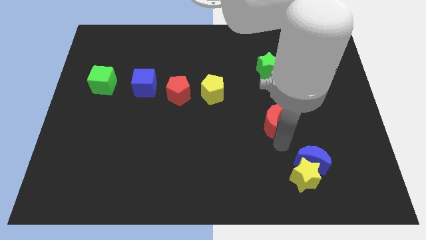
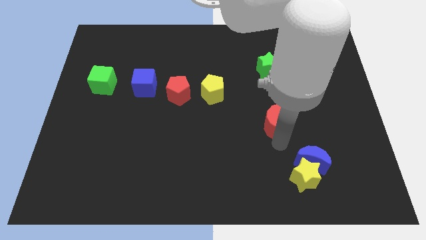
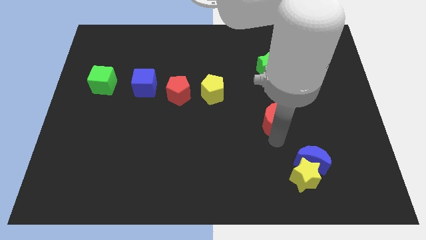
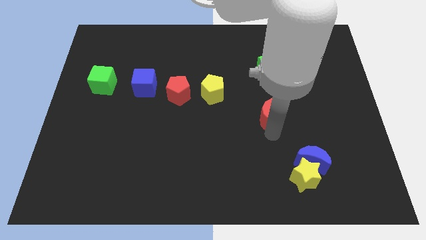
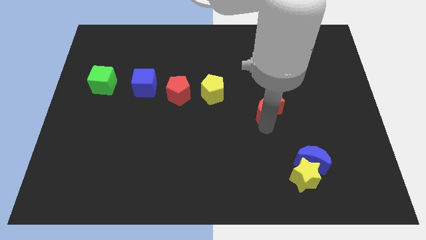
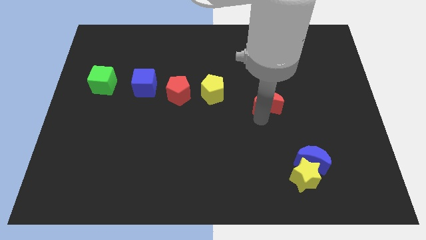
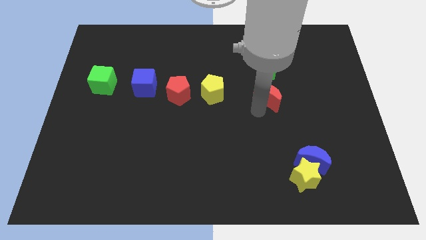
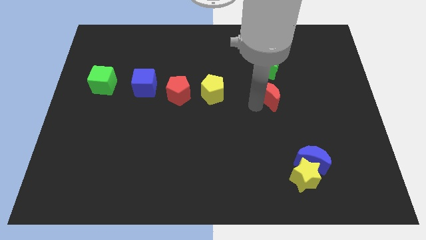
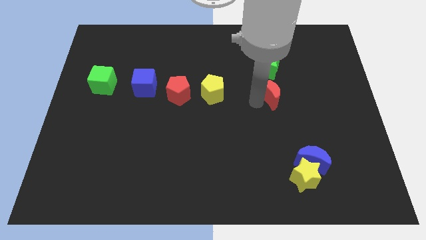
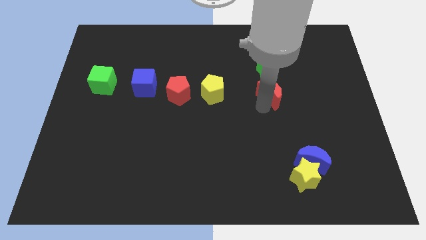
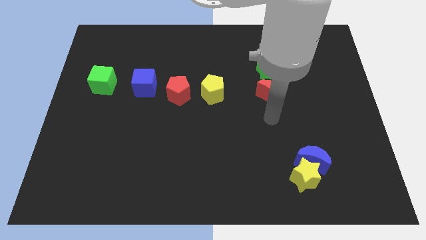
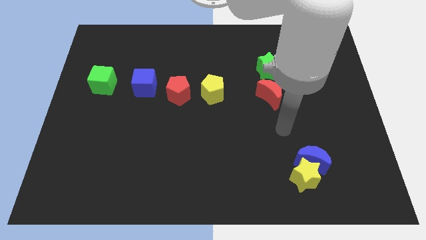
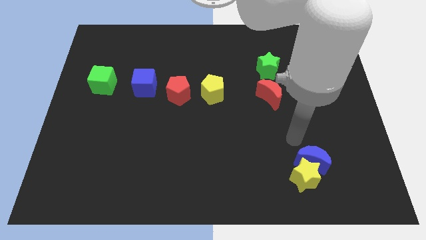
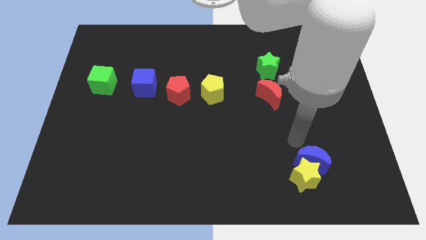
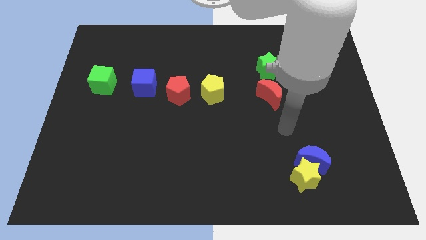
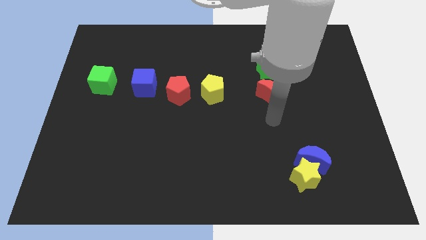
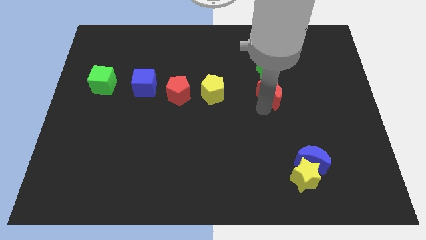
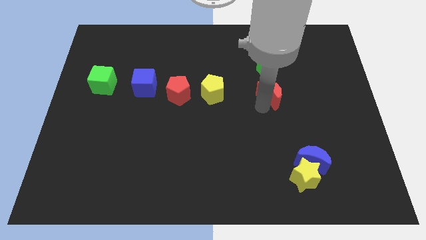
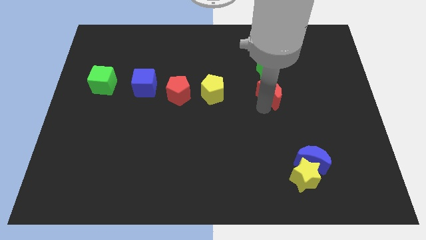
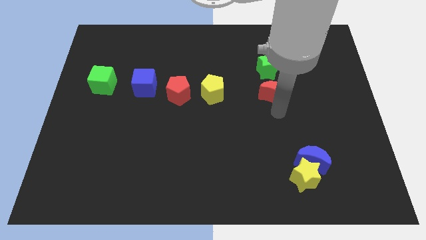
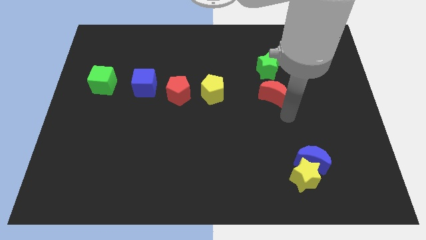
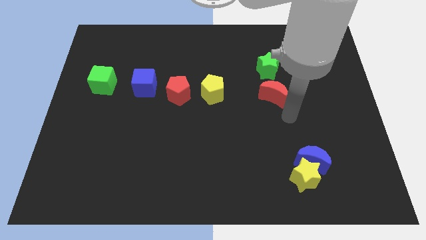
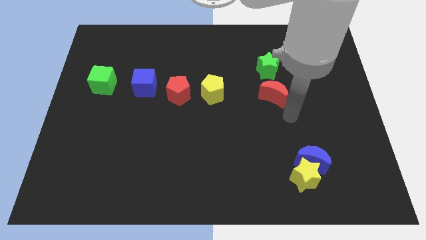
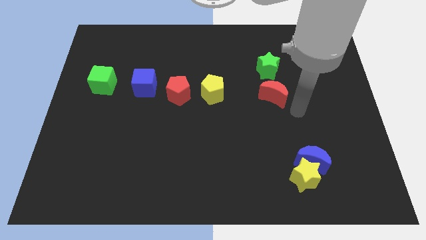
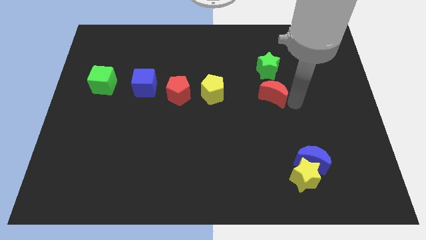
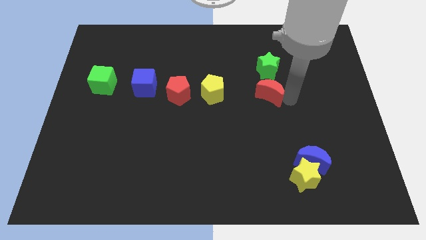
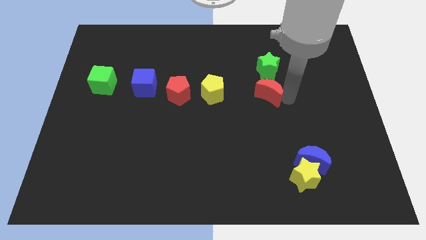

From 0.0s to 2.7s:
place the red crescent to the bottom of green star

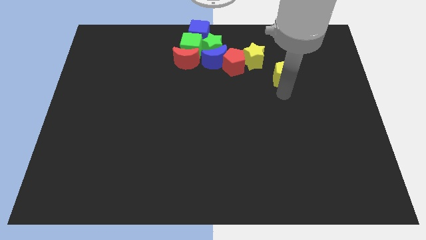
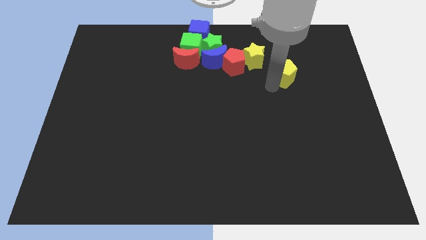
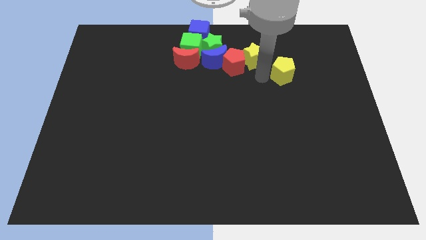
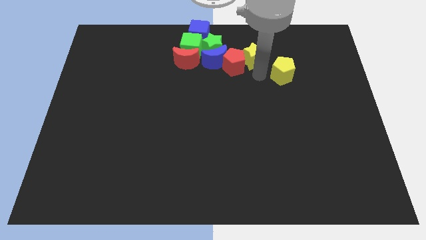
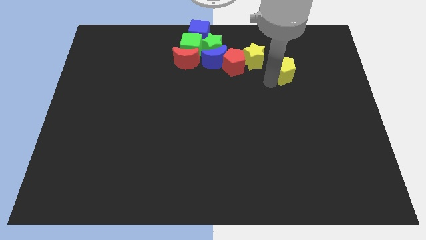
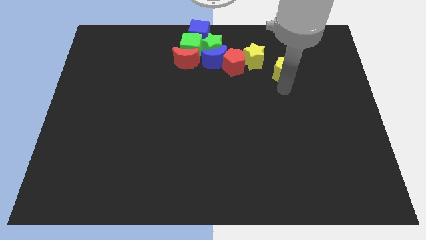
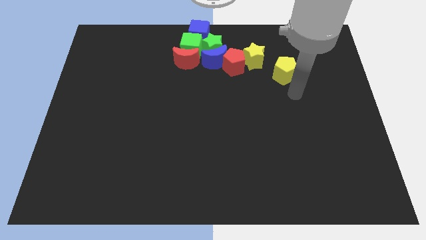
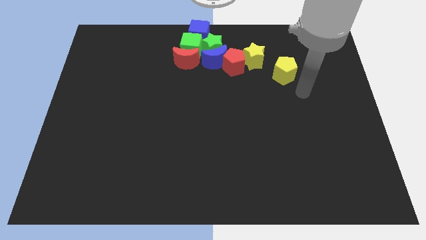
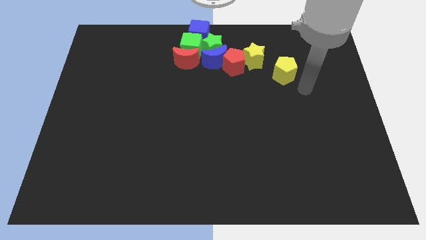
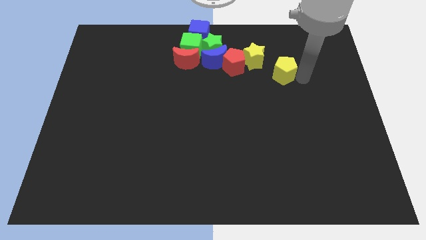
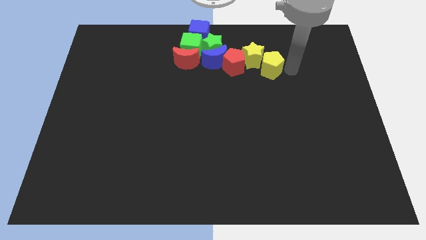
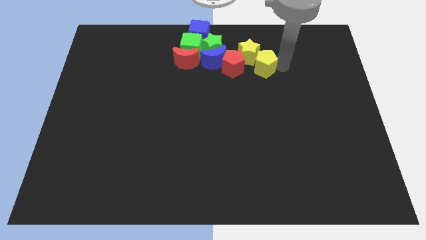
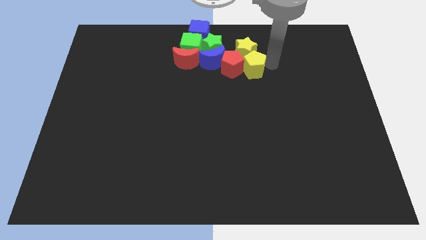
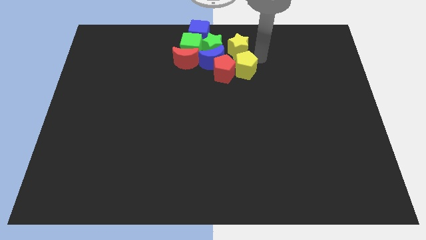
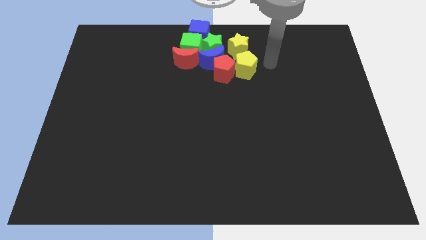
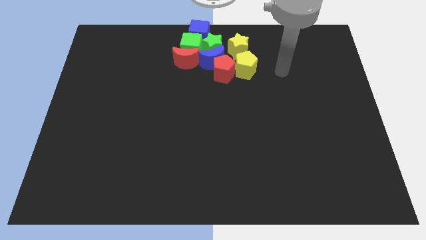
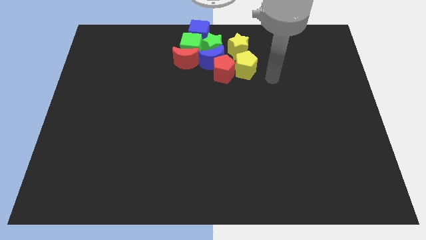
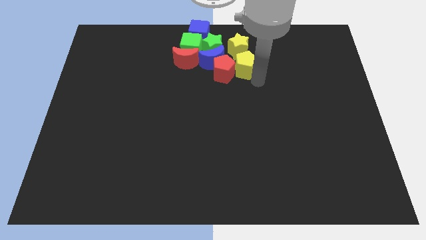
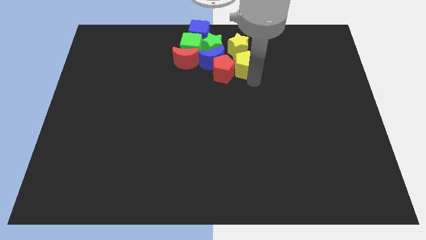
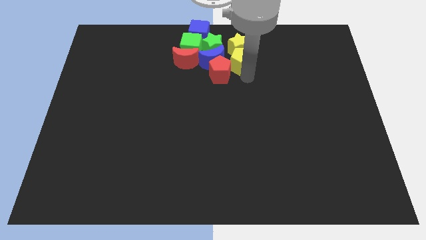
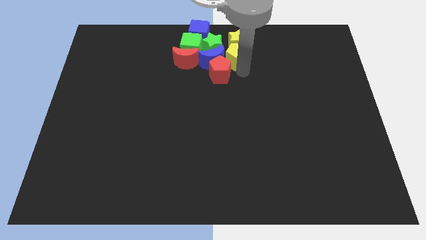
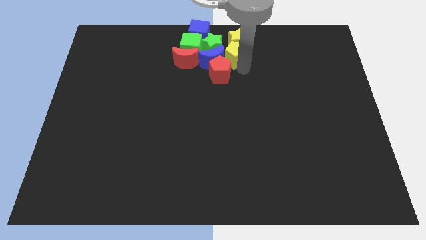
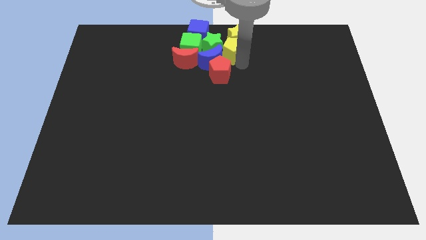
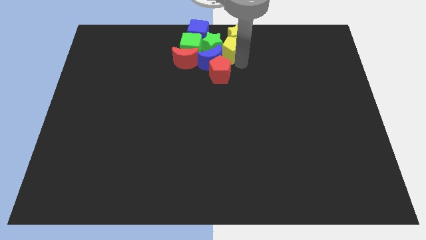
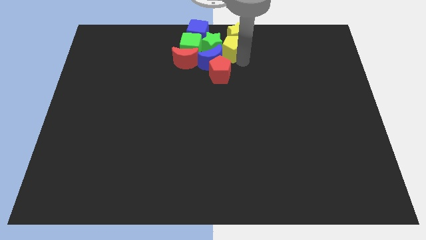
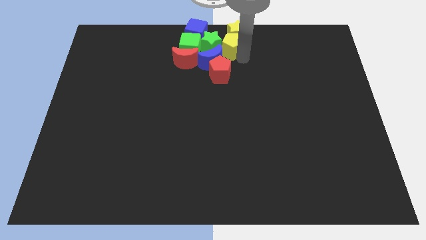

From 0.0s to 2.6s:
place the yellow pentagon into the group of all the blocks at the top

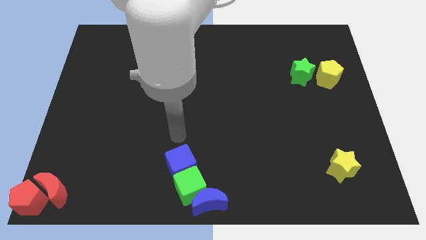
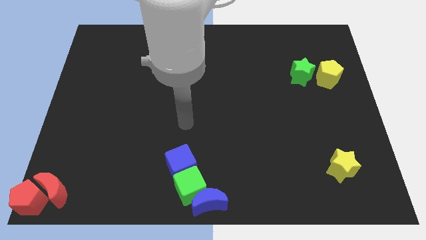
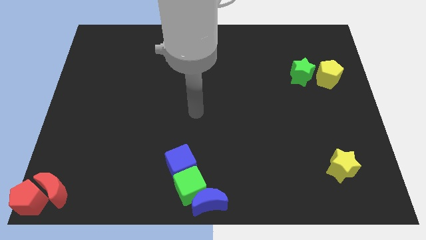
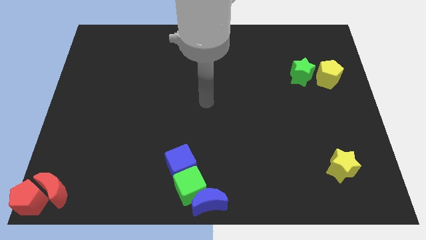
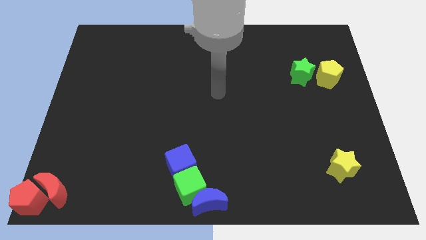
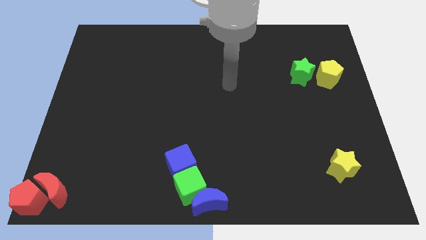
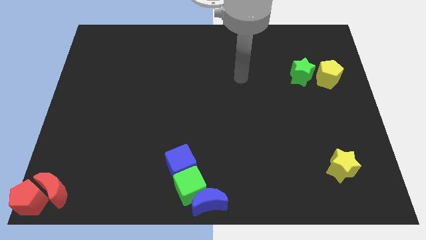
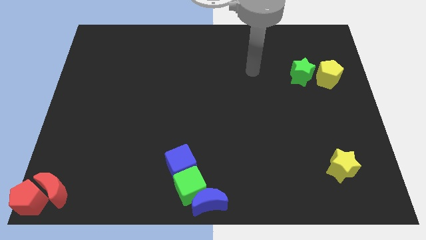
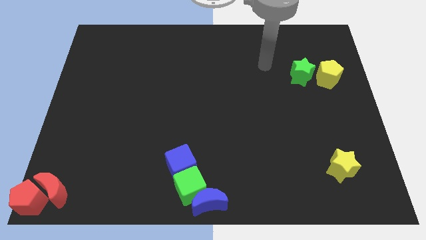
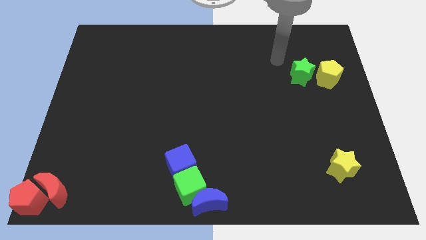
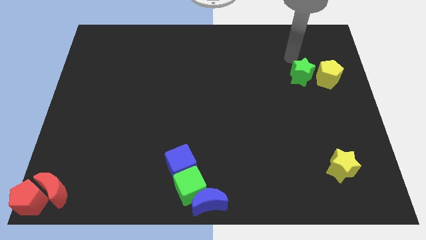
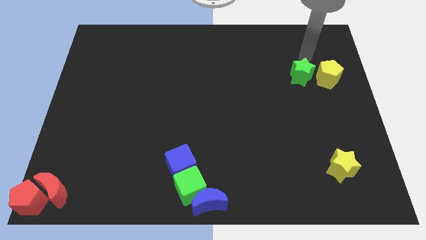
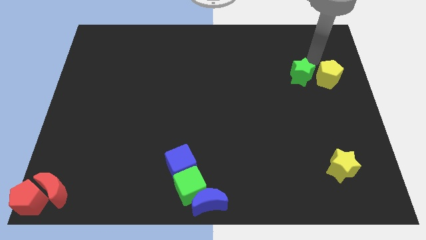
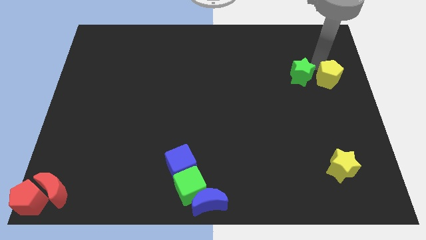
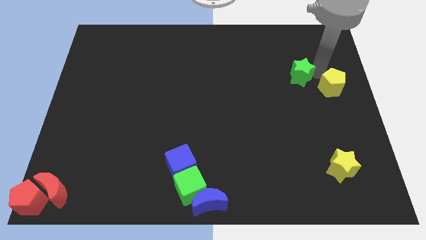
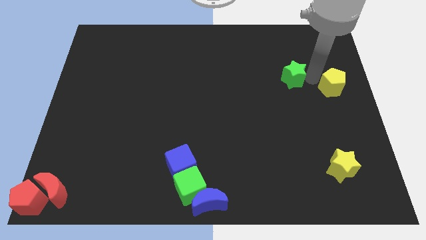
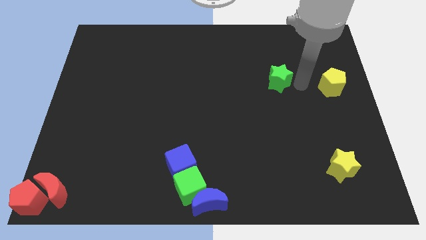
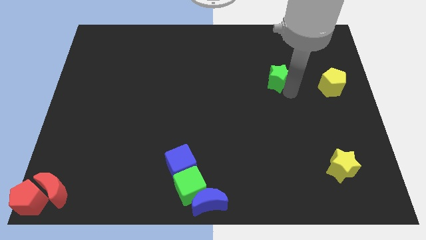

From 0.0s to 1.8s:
move the green star away from the yellow pentagon

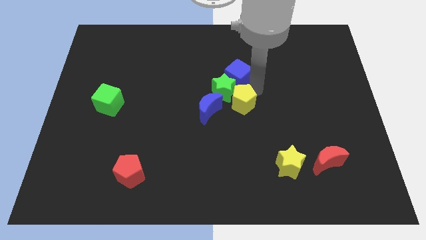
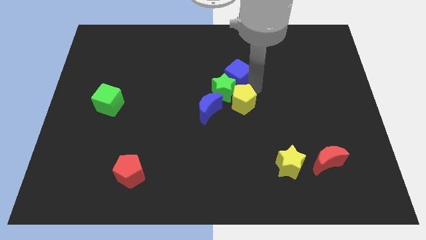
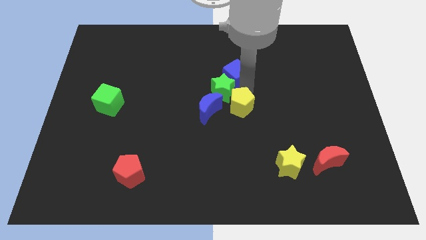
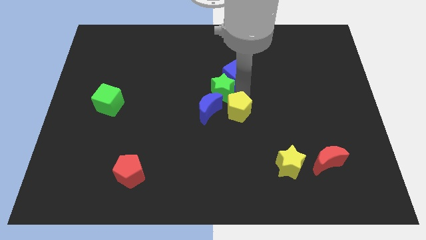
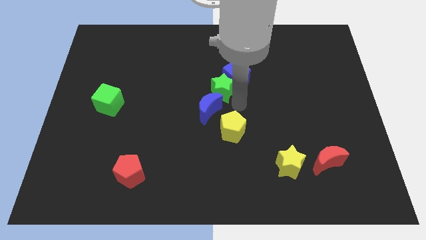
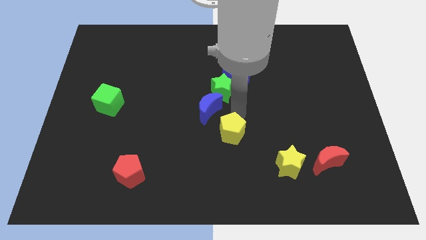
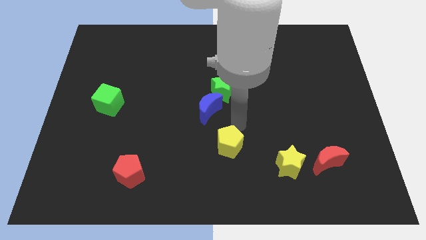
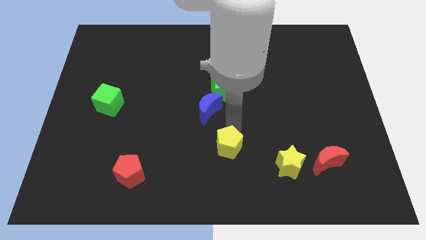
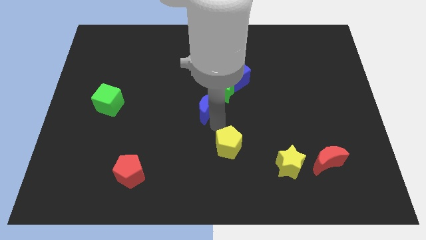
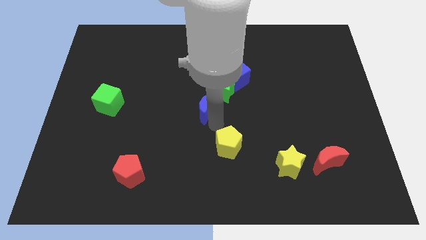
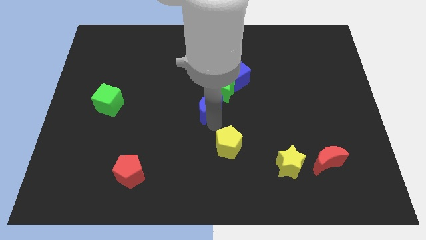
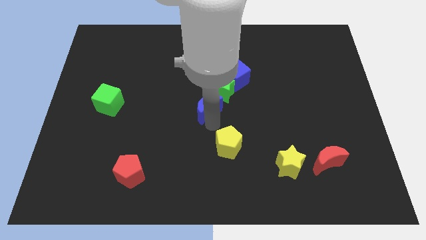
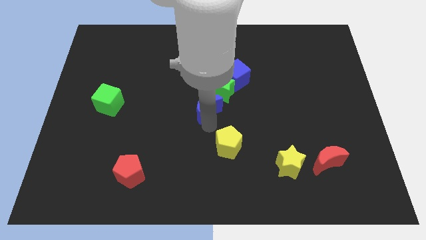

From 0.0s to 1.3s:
move the yellow pentagon to the bottom side of the blue moon

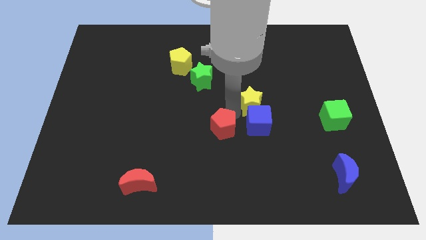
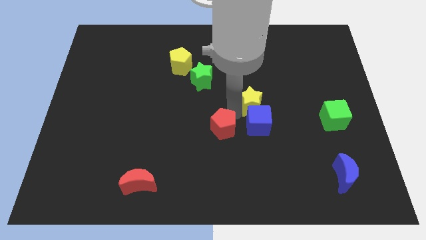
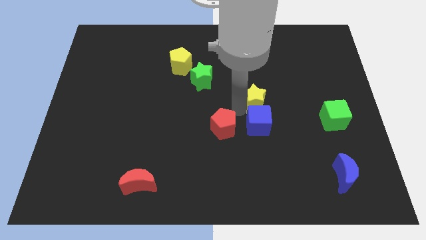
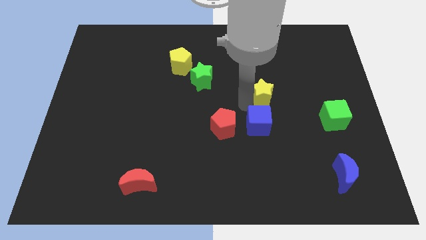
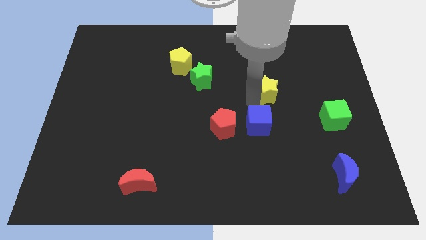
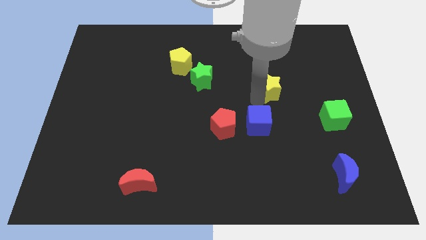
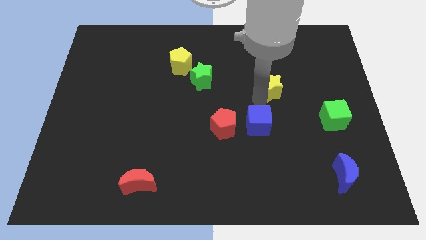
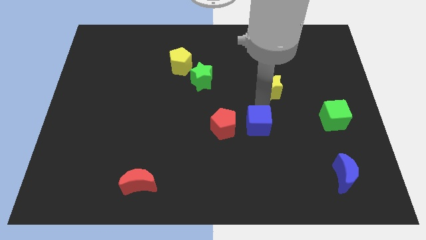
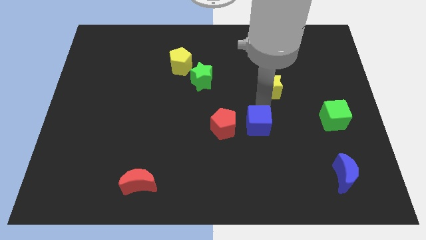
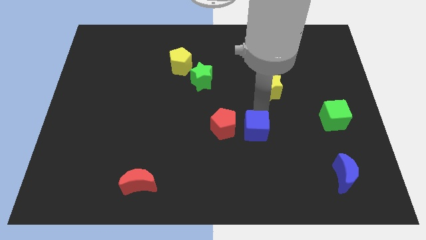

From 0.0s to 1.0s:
separate the yellow star from the blue cube
